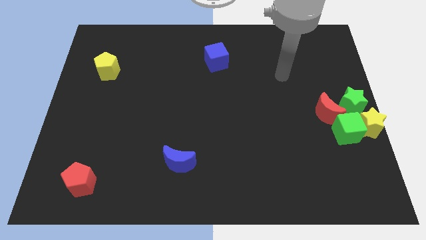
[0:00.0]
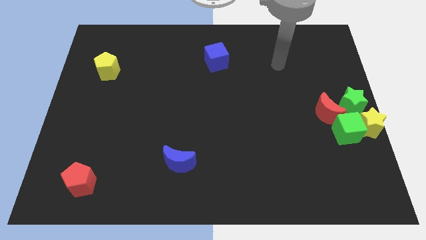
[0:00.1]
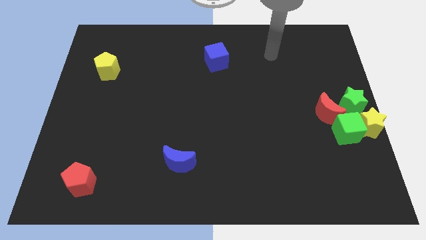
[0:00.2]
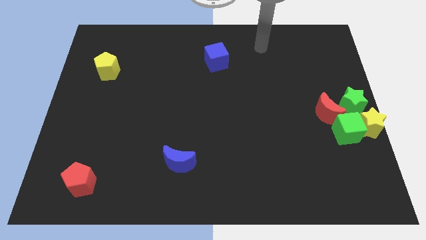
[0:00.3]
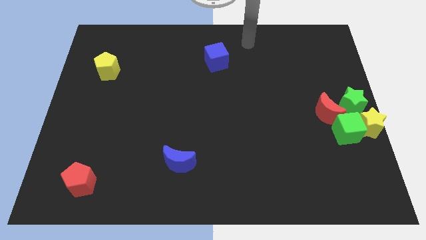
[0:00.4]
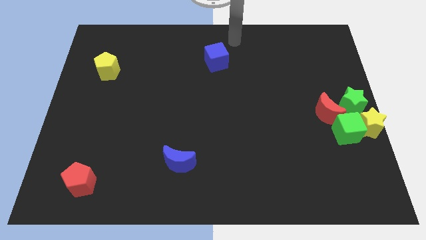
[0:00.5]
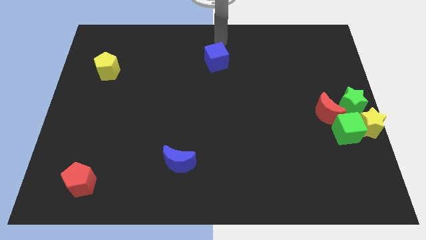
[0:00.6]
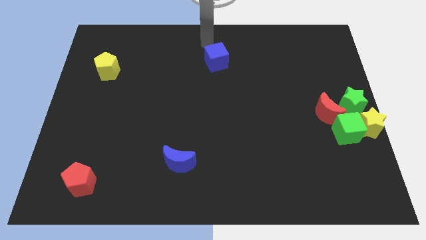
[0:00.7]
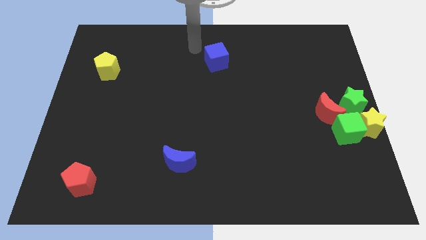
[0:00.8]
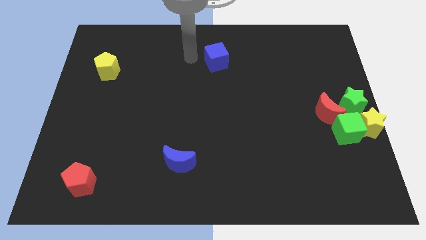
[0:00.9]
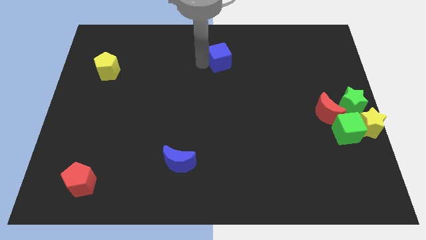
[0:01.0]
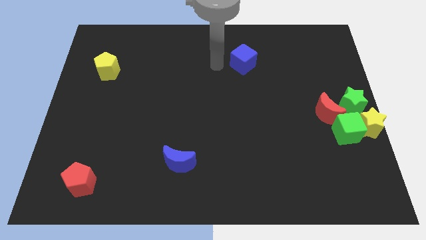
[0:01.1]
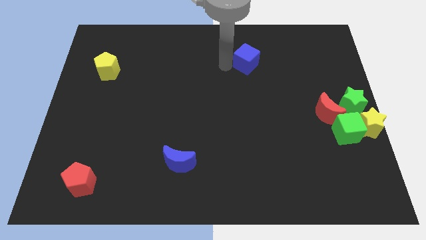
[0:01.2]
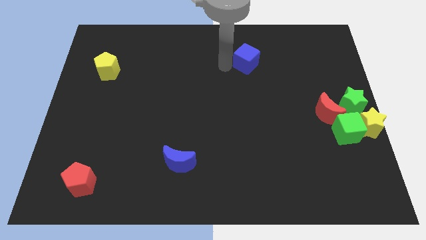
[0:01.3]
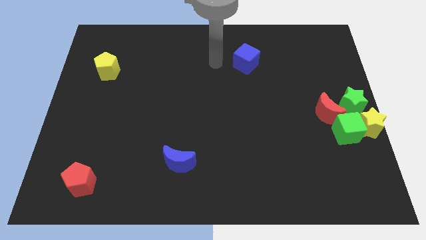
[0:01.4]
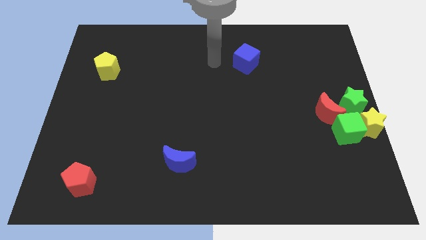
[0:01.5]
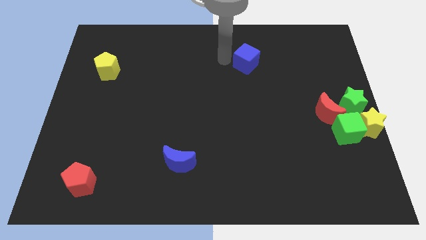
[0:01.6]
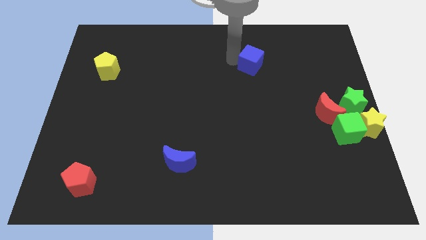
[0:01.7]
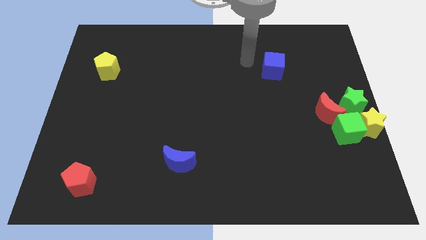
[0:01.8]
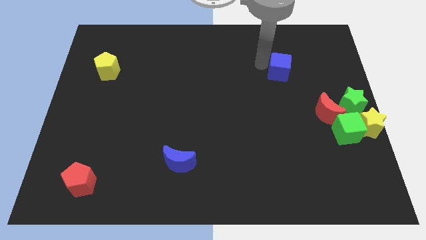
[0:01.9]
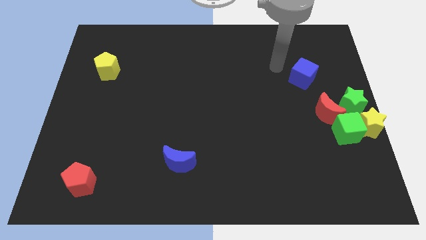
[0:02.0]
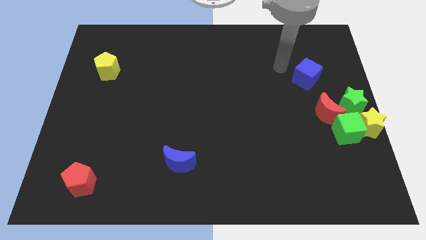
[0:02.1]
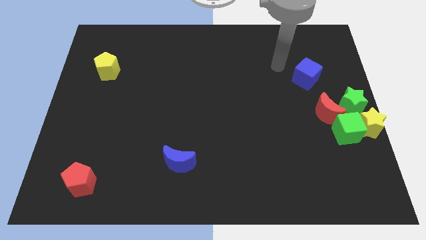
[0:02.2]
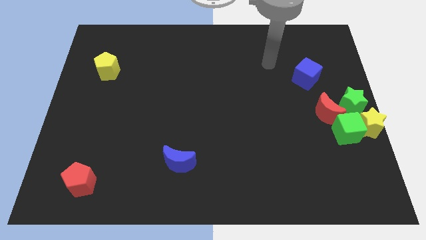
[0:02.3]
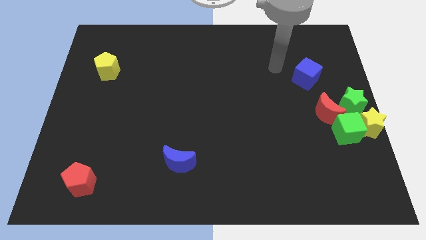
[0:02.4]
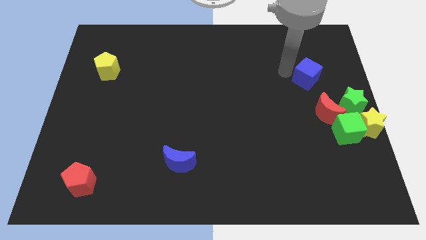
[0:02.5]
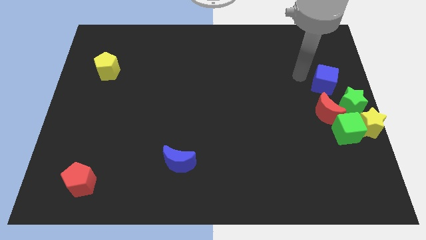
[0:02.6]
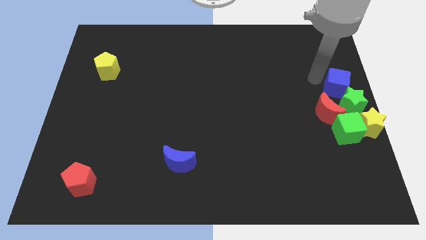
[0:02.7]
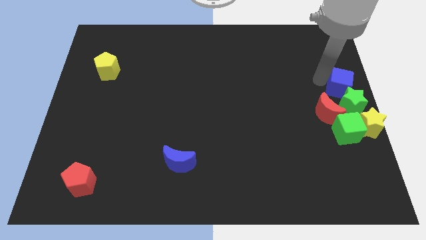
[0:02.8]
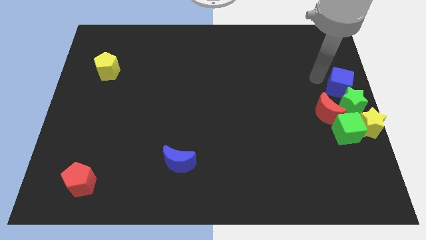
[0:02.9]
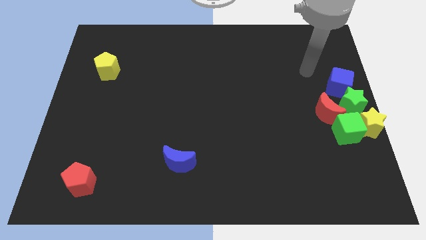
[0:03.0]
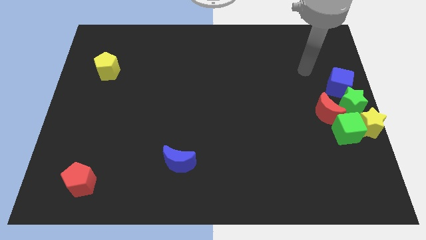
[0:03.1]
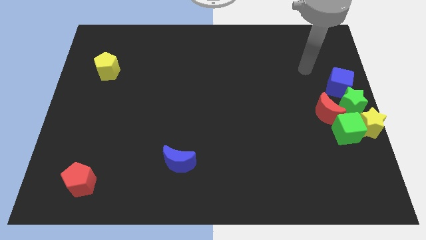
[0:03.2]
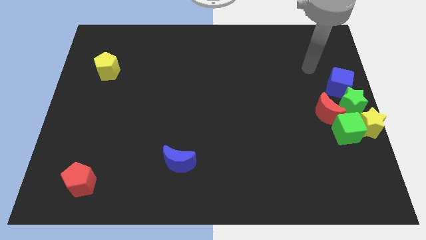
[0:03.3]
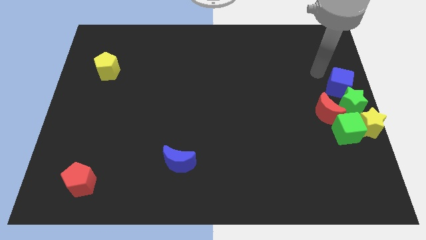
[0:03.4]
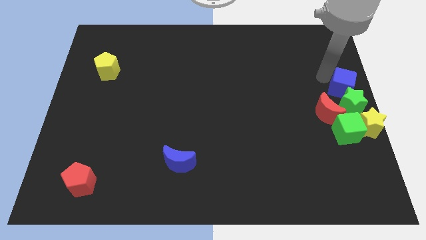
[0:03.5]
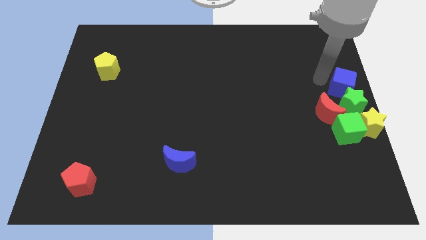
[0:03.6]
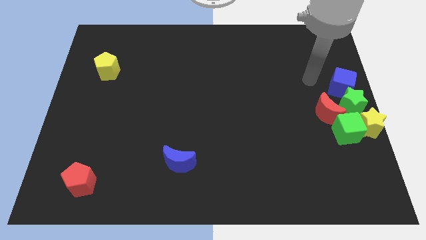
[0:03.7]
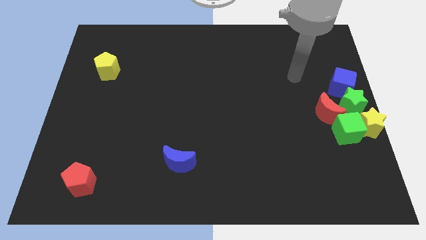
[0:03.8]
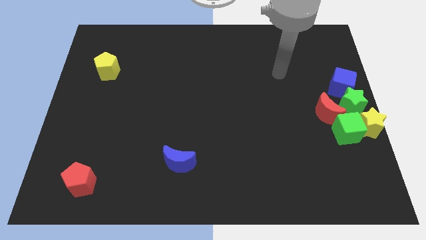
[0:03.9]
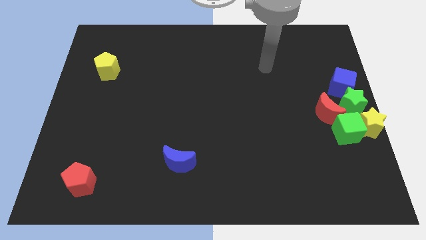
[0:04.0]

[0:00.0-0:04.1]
move the blue cube to the top side of the green star

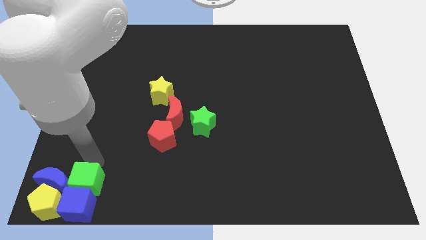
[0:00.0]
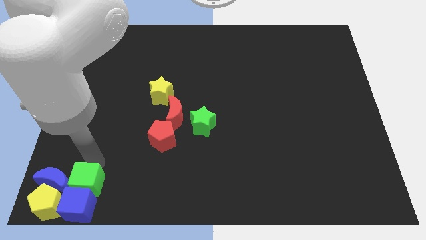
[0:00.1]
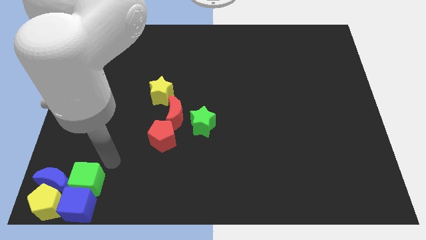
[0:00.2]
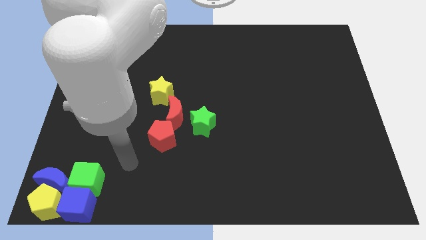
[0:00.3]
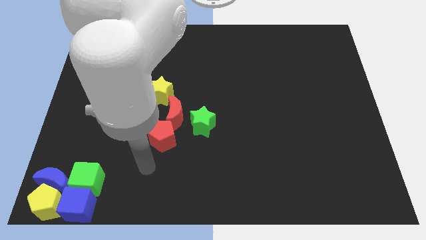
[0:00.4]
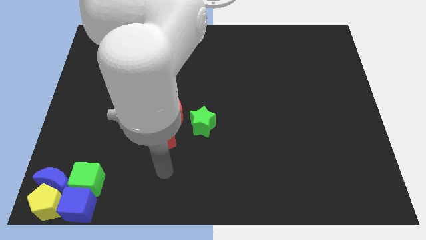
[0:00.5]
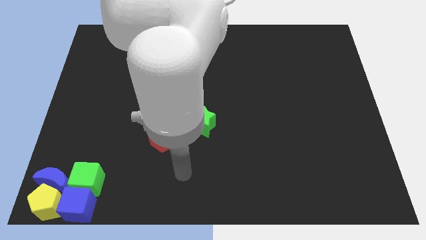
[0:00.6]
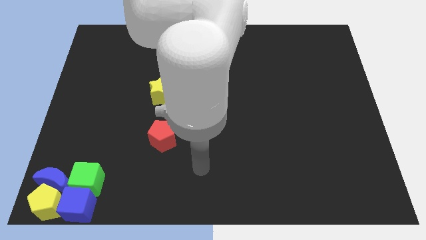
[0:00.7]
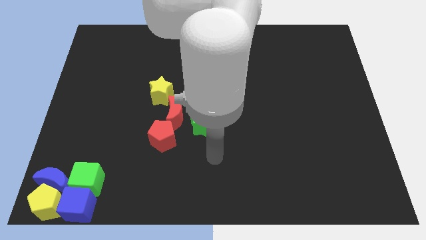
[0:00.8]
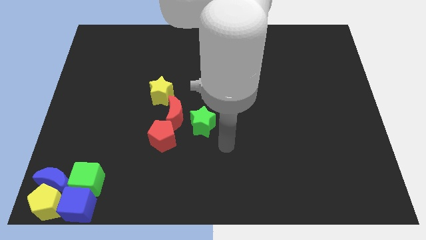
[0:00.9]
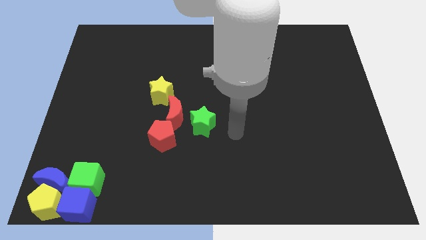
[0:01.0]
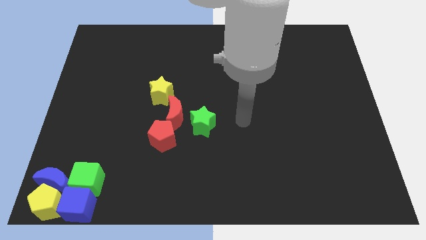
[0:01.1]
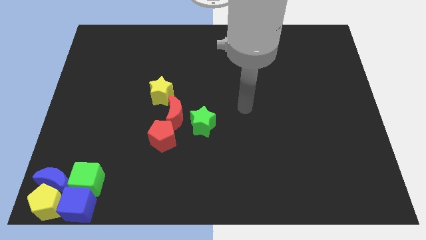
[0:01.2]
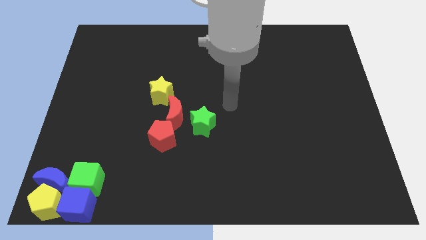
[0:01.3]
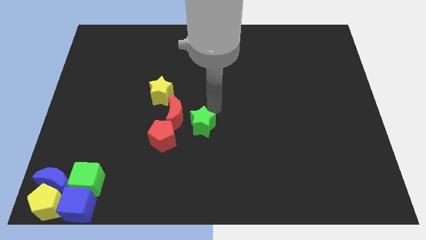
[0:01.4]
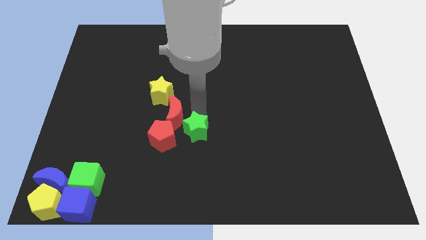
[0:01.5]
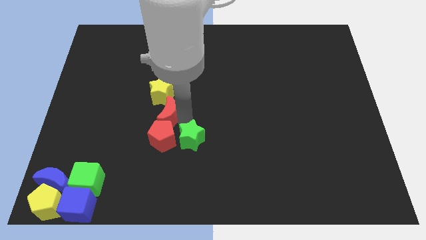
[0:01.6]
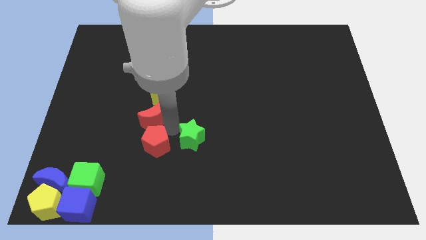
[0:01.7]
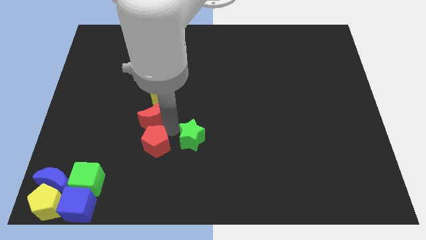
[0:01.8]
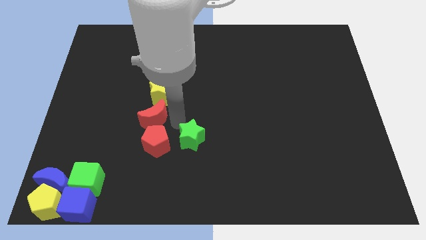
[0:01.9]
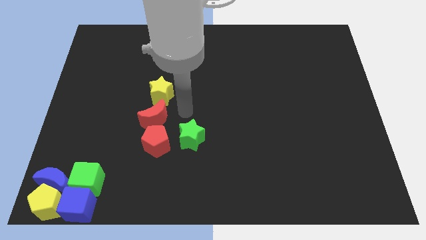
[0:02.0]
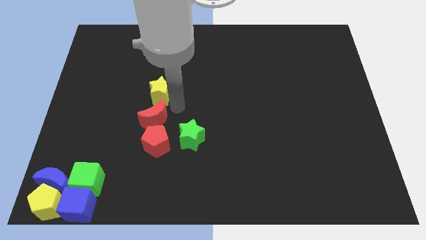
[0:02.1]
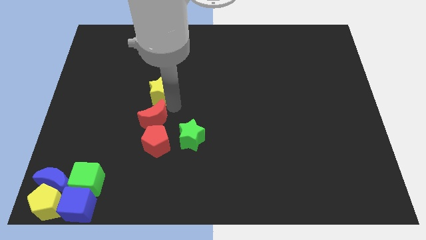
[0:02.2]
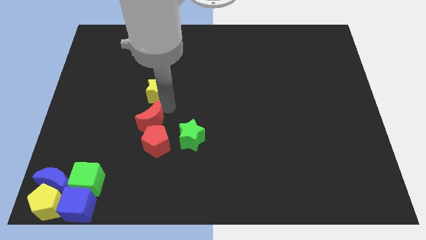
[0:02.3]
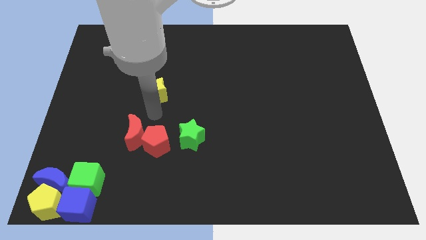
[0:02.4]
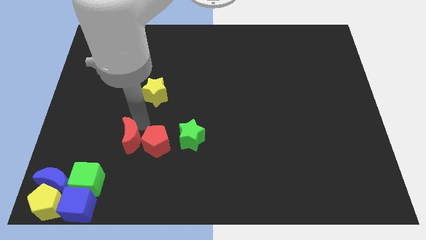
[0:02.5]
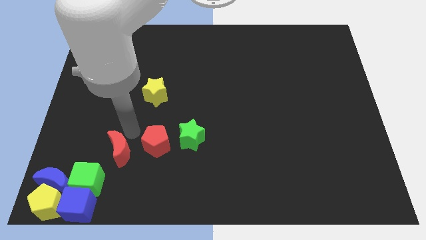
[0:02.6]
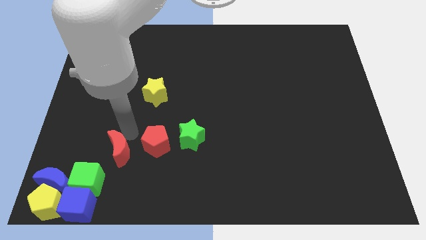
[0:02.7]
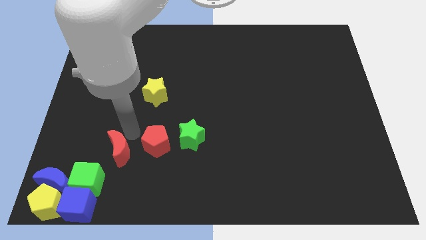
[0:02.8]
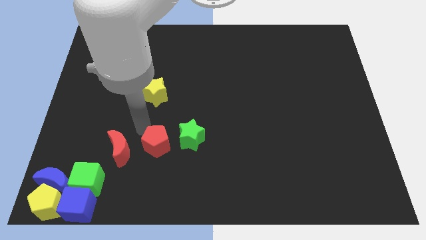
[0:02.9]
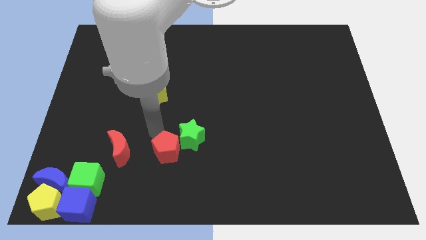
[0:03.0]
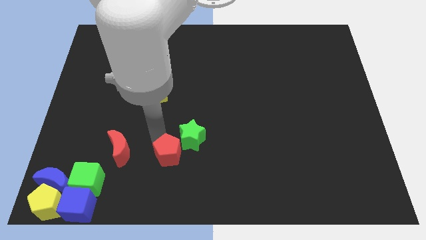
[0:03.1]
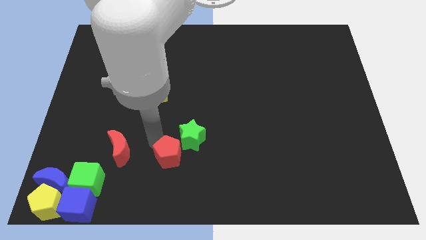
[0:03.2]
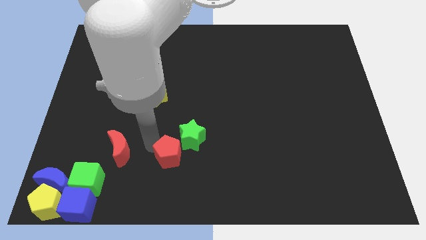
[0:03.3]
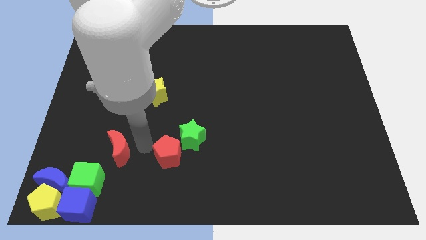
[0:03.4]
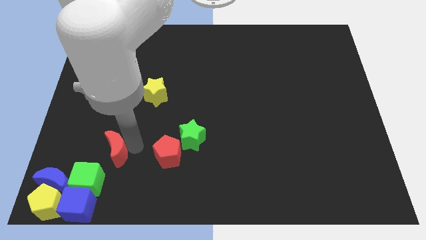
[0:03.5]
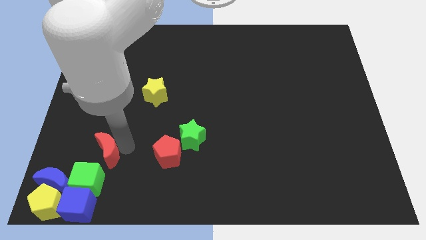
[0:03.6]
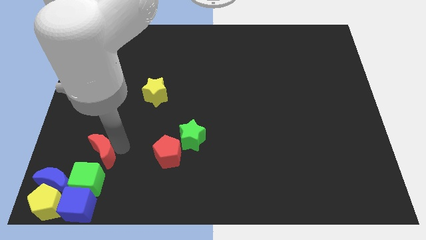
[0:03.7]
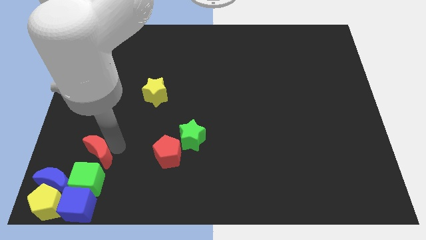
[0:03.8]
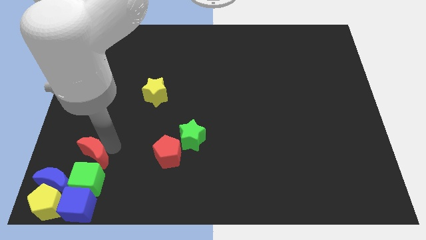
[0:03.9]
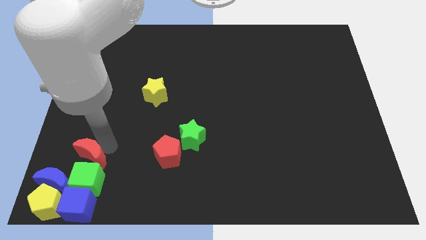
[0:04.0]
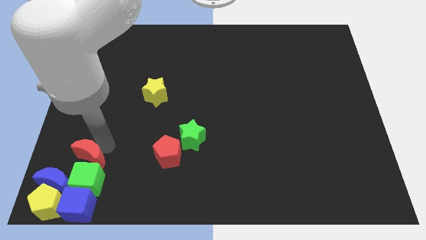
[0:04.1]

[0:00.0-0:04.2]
move red moon above green cube

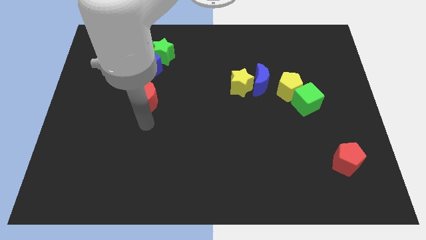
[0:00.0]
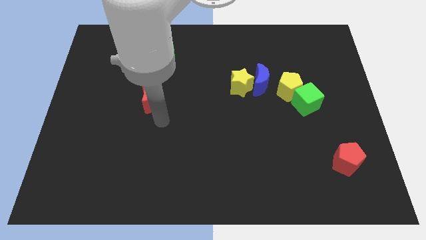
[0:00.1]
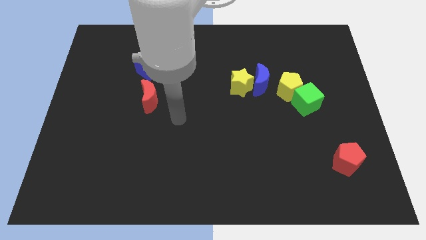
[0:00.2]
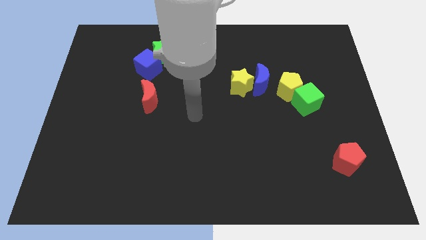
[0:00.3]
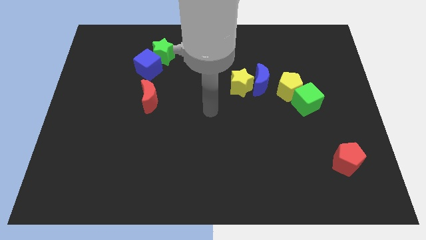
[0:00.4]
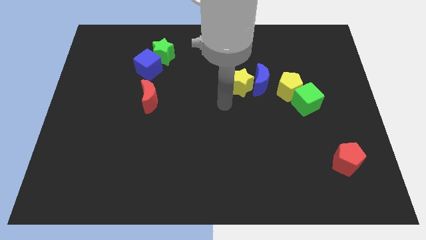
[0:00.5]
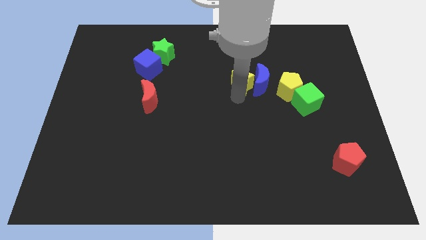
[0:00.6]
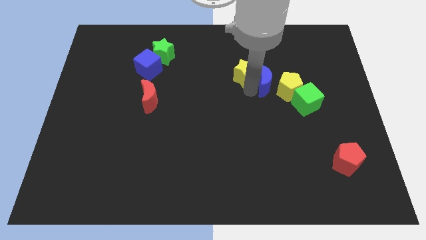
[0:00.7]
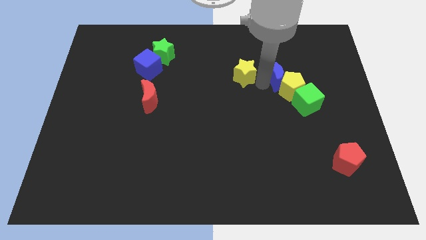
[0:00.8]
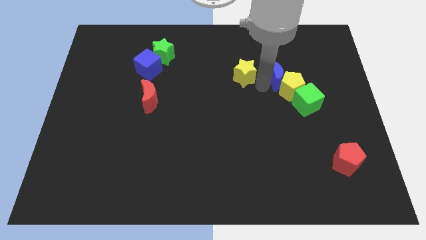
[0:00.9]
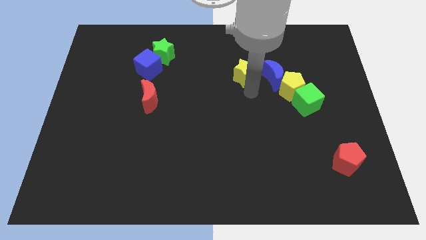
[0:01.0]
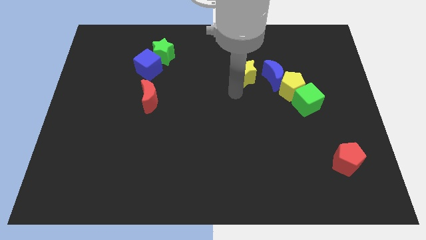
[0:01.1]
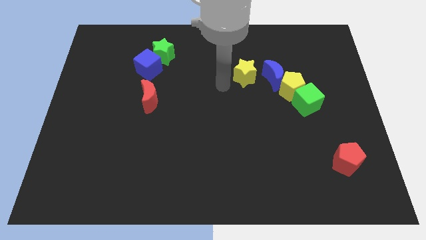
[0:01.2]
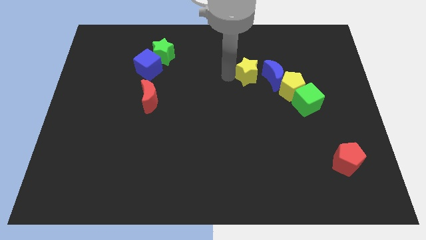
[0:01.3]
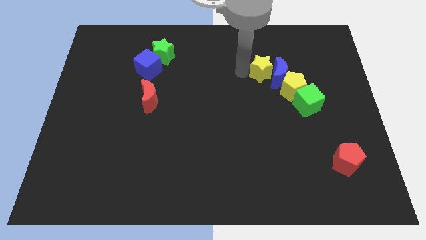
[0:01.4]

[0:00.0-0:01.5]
separate blue moon and yellow star
